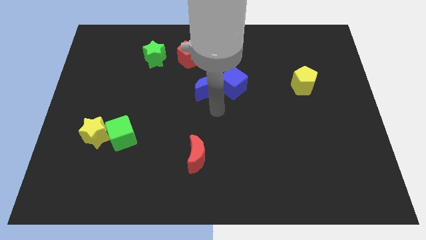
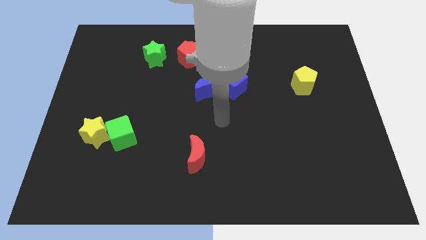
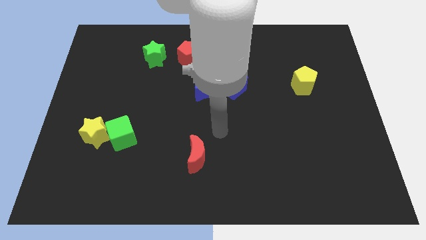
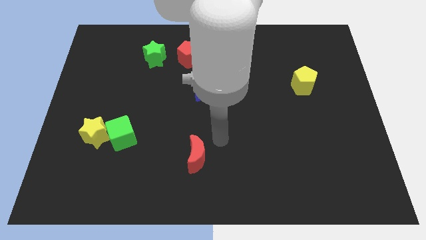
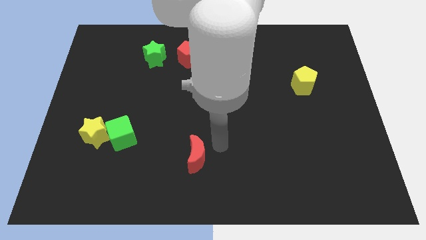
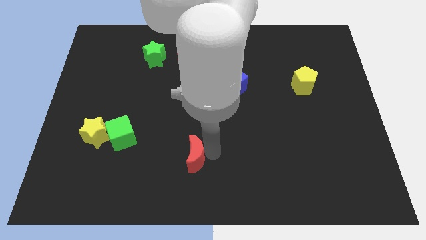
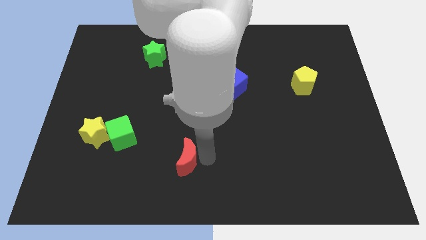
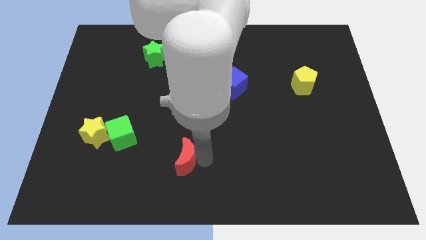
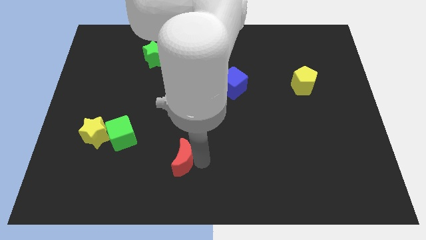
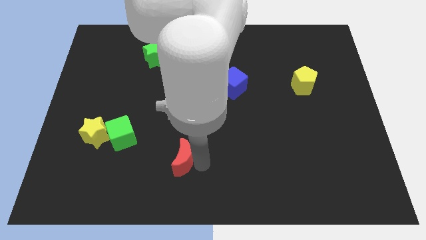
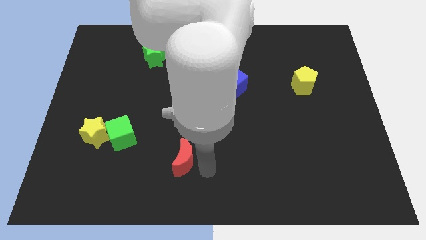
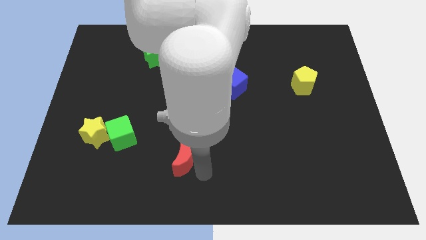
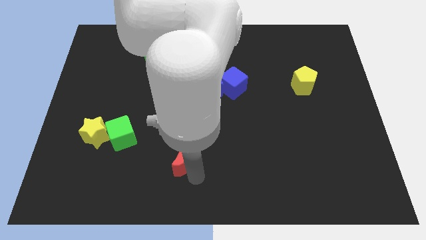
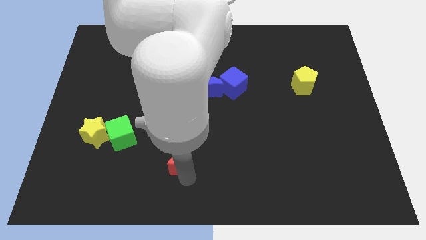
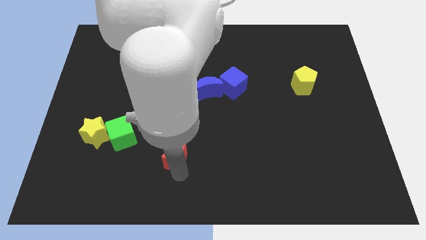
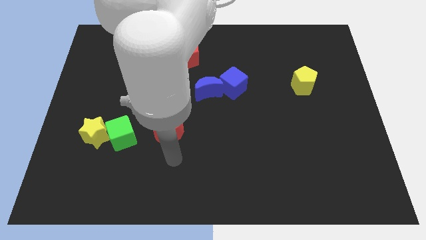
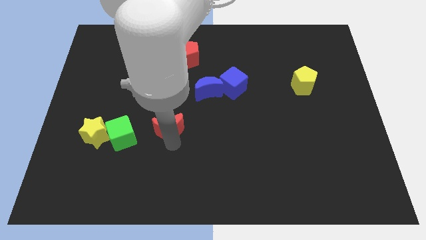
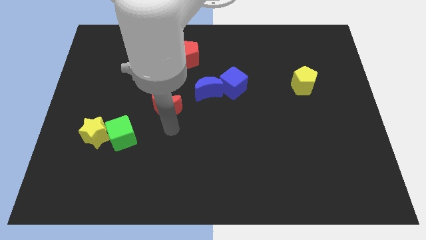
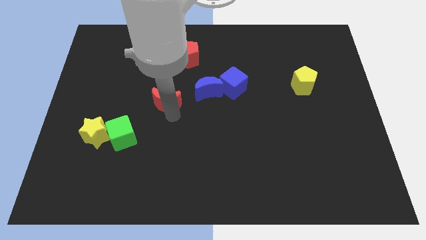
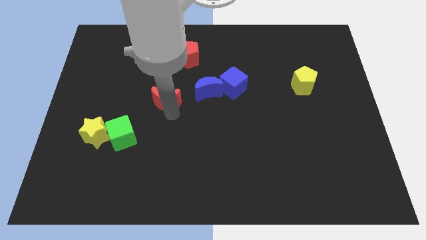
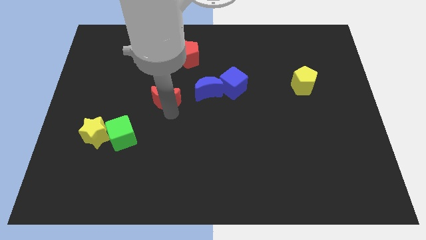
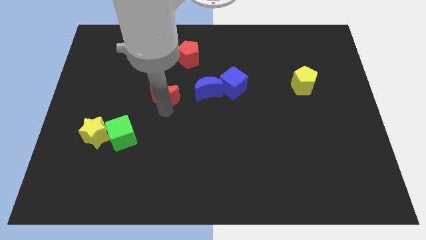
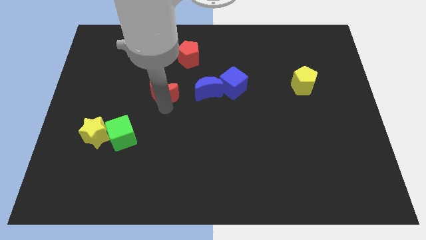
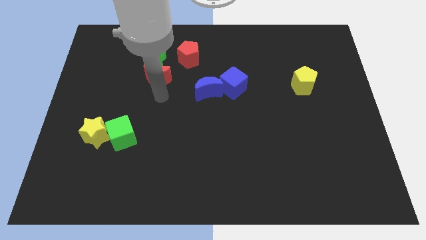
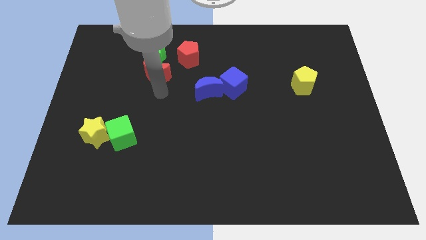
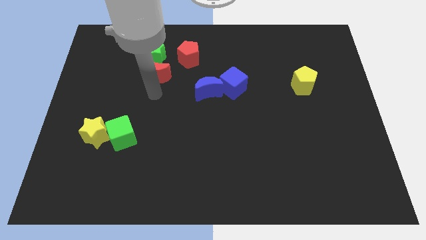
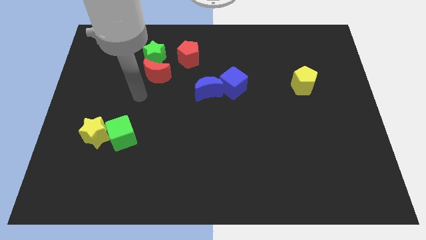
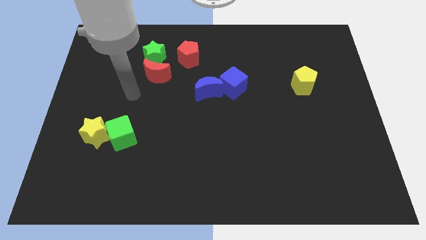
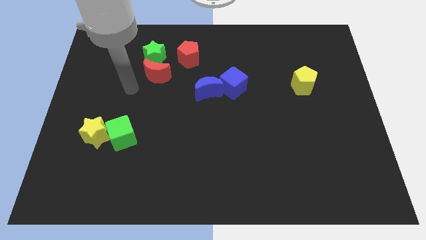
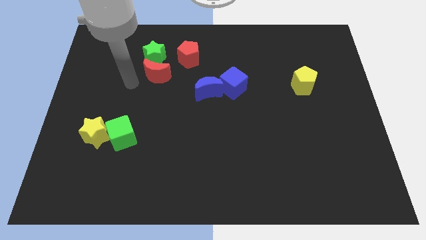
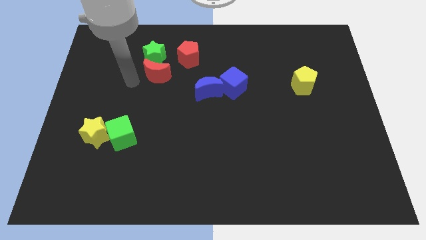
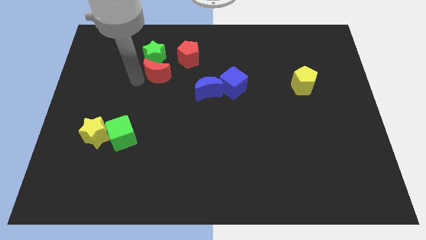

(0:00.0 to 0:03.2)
push the red moon to the bottom side of the green star

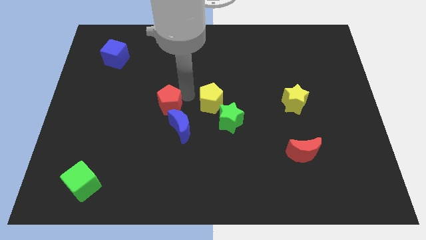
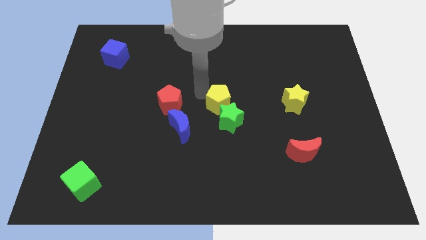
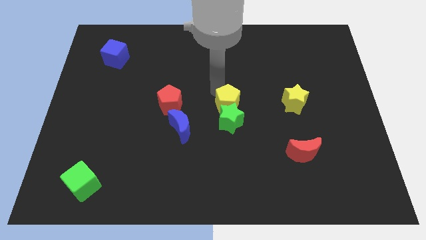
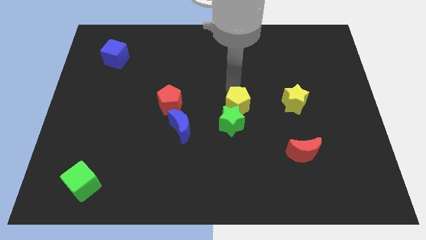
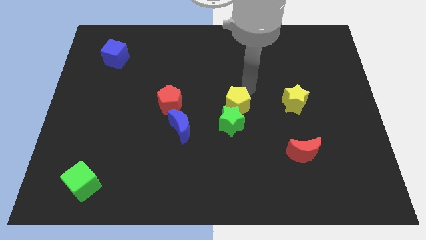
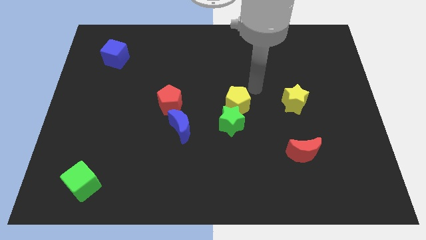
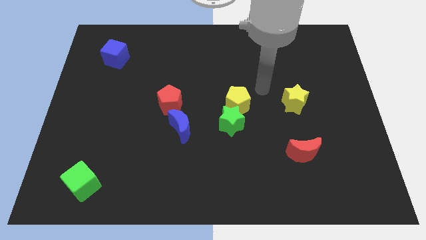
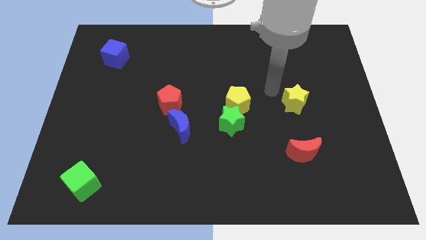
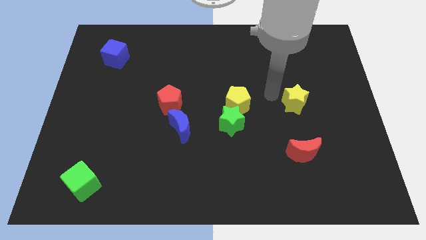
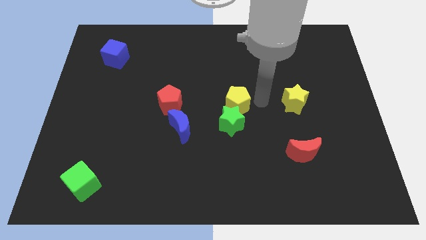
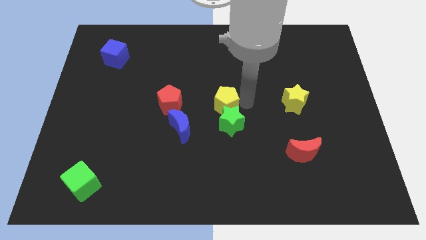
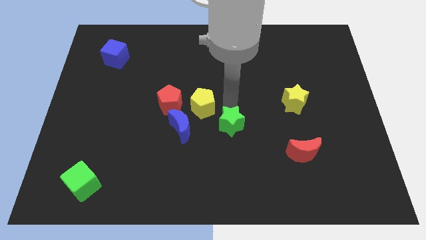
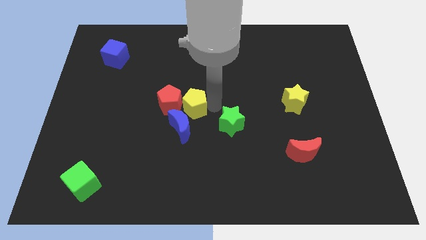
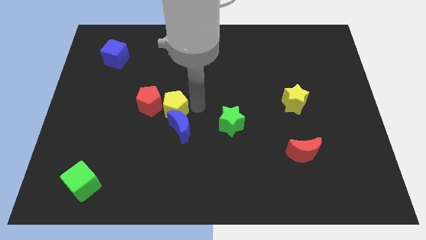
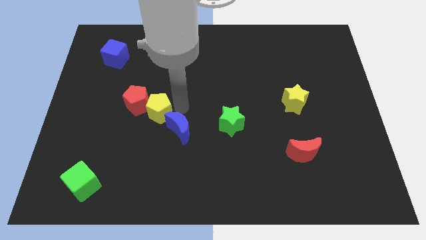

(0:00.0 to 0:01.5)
push the yellow pentagon to the right of the red pentagon

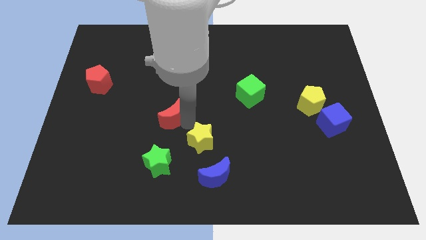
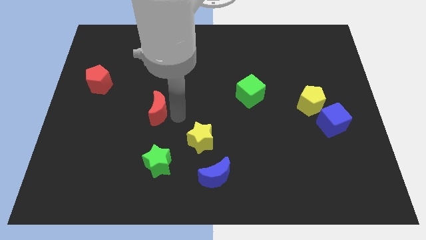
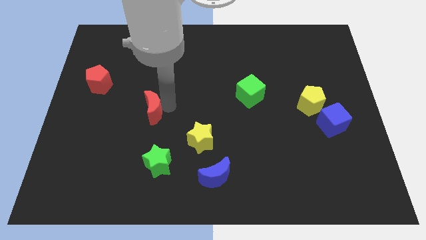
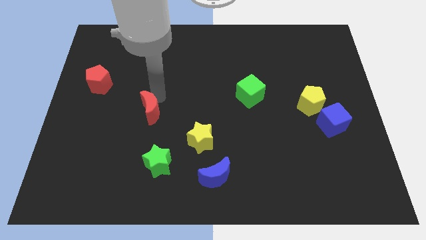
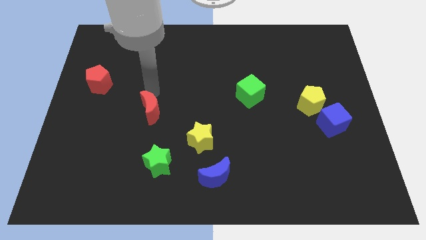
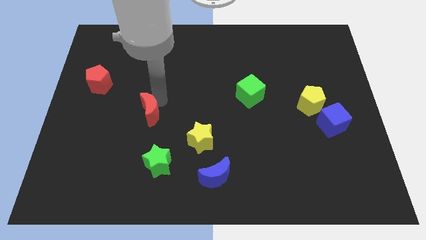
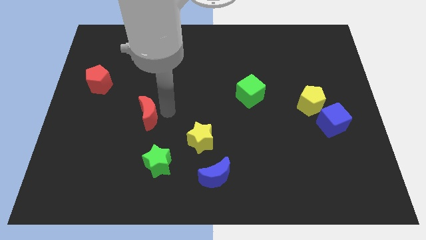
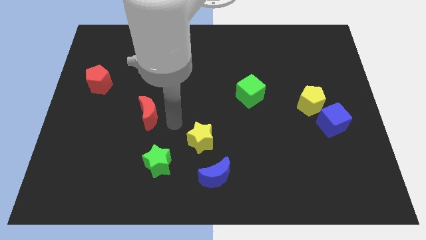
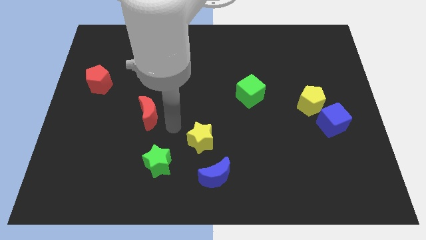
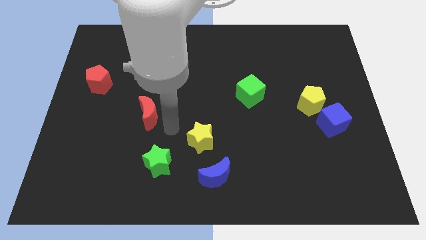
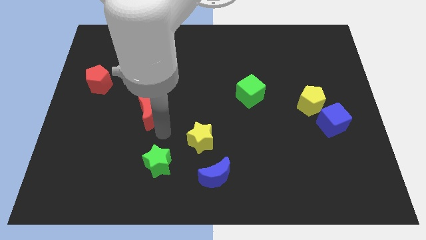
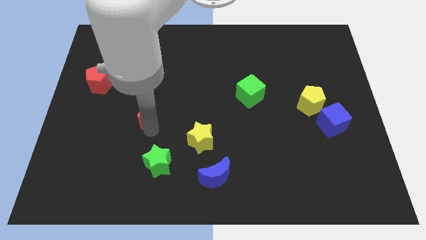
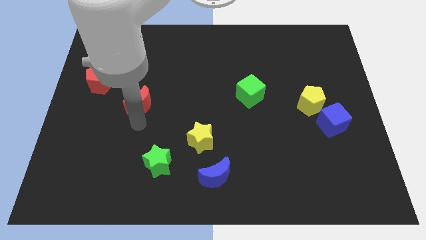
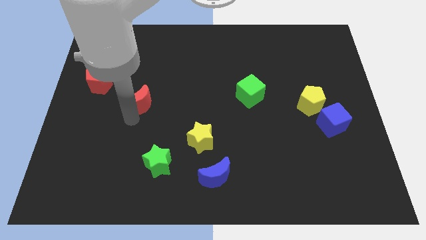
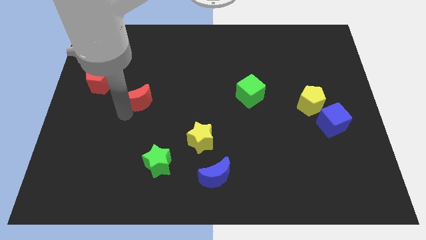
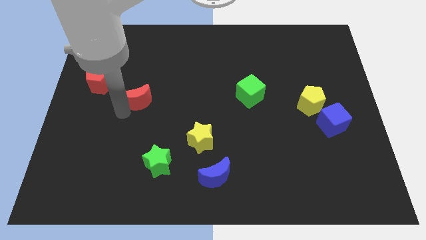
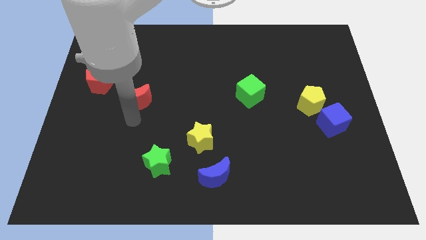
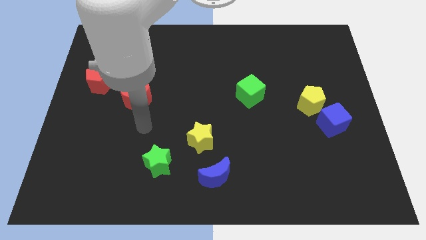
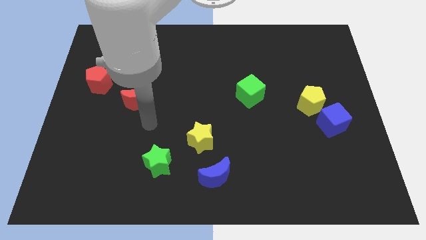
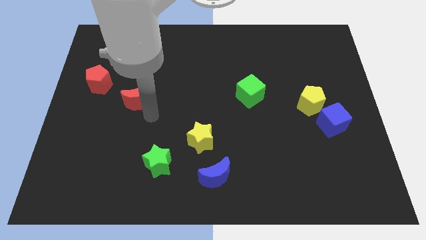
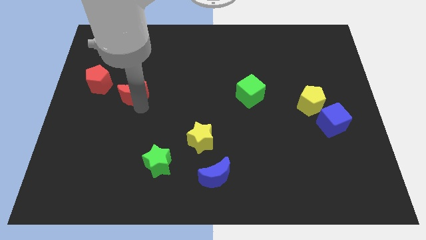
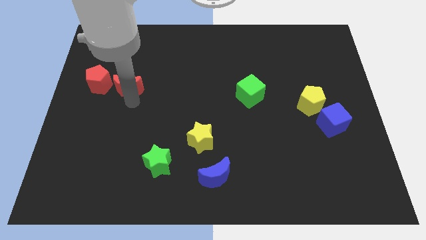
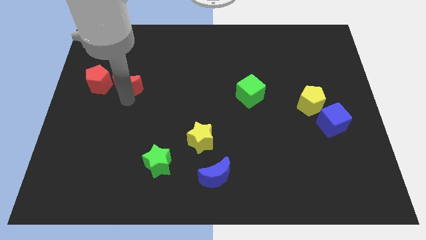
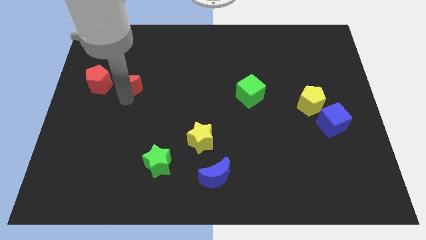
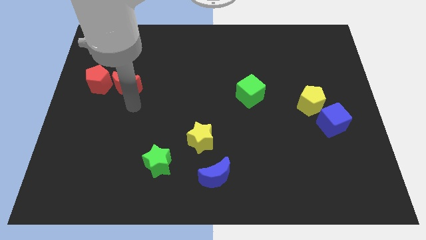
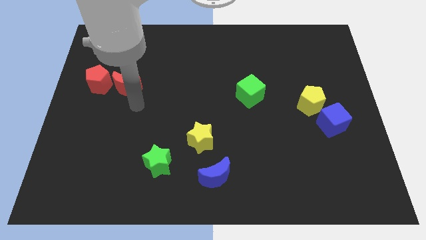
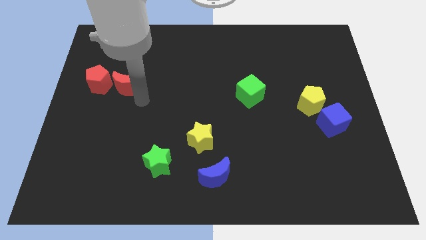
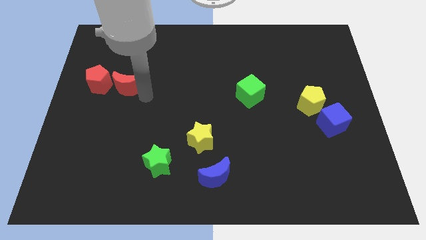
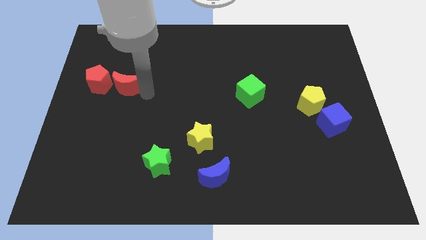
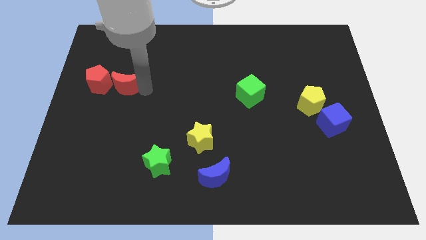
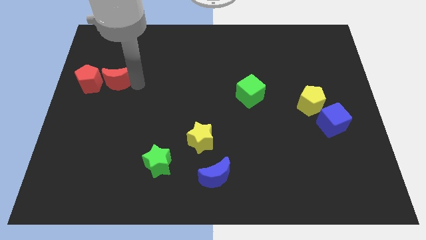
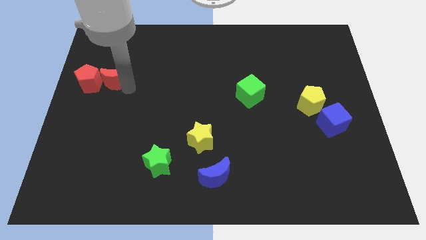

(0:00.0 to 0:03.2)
place the red crescent to the right of the red pentagon

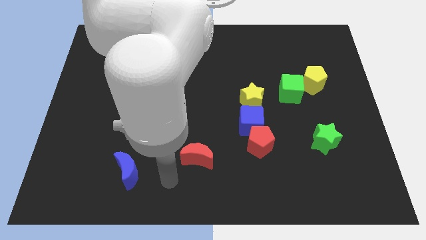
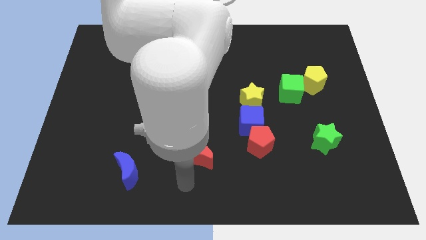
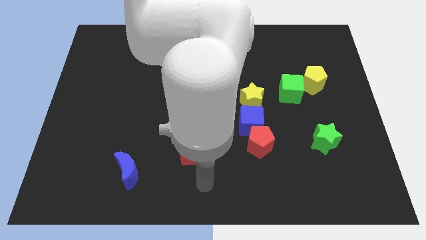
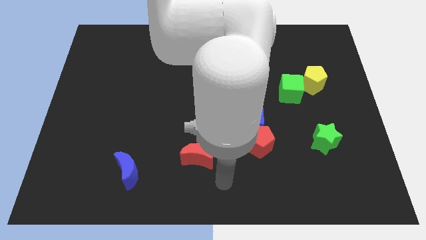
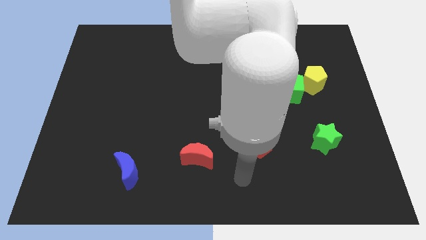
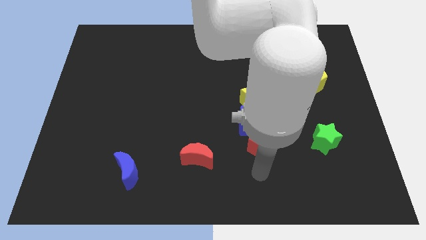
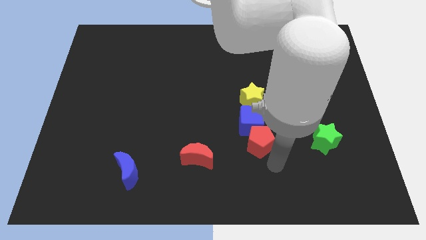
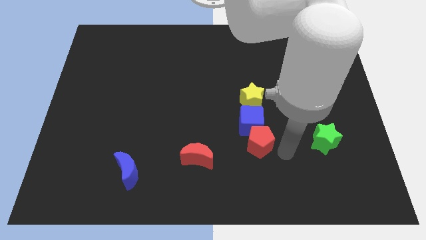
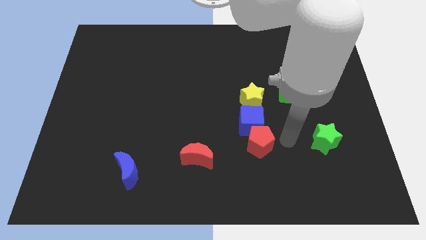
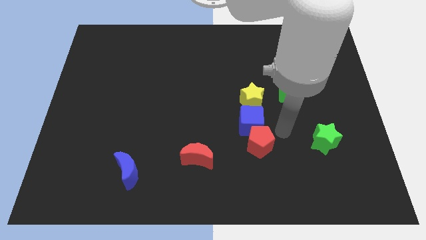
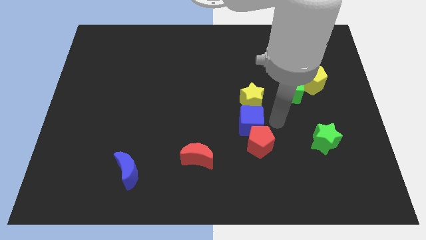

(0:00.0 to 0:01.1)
move your arm to the right side of the blue cube
